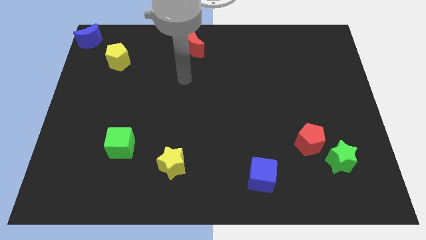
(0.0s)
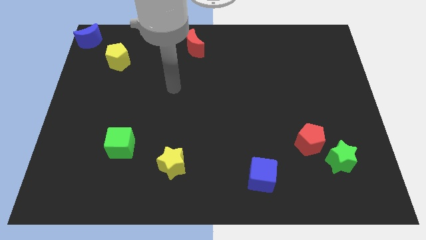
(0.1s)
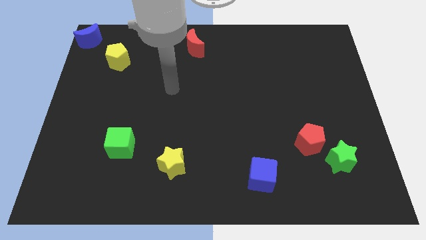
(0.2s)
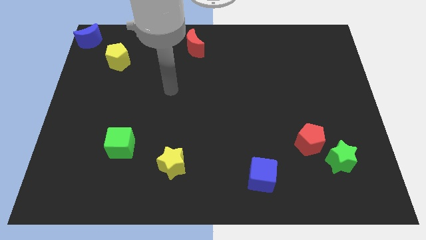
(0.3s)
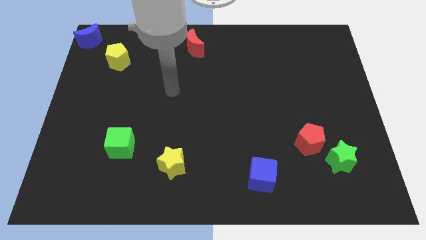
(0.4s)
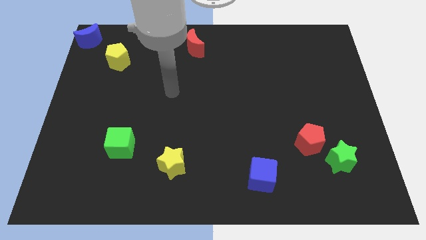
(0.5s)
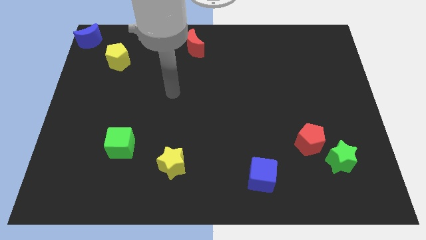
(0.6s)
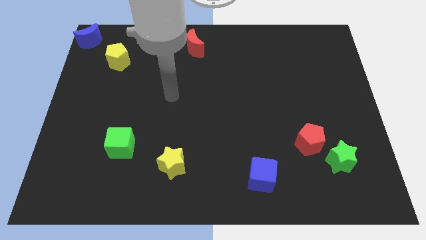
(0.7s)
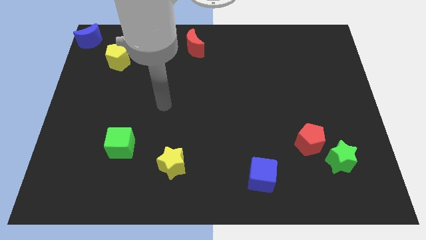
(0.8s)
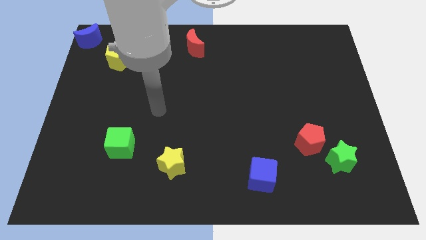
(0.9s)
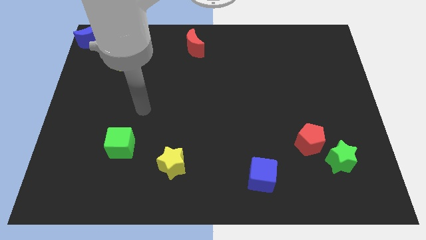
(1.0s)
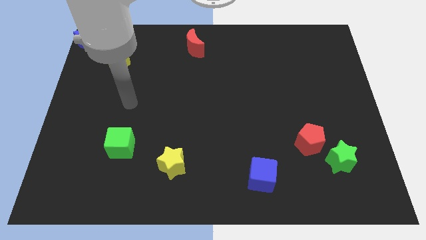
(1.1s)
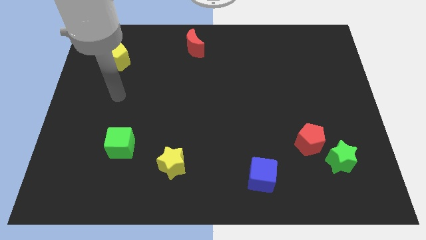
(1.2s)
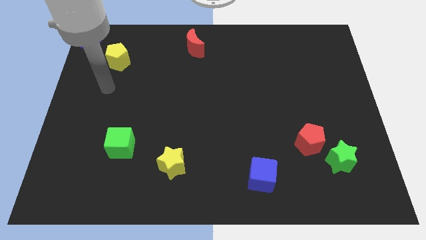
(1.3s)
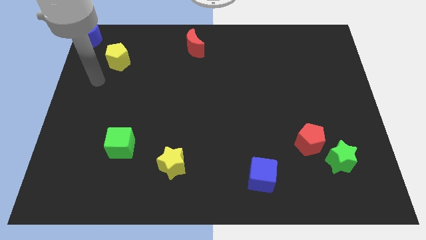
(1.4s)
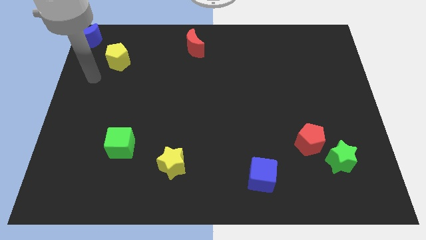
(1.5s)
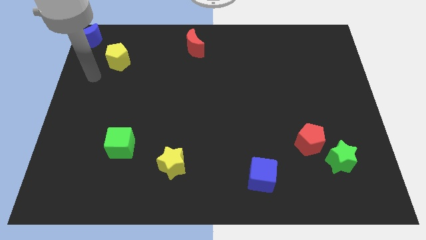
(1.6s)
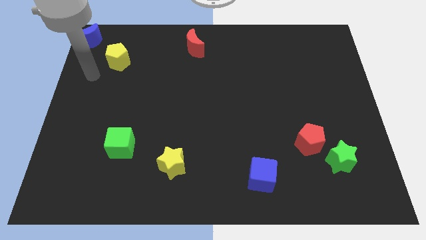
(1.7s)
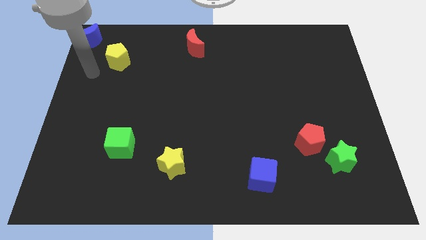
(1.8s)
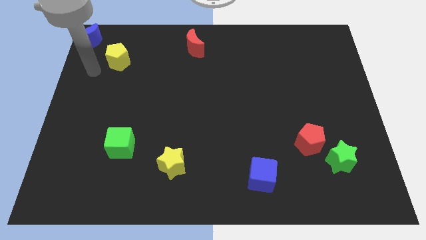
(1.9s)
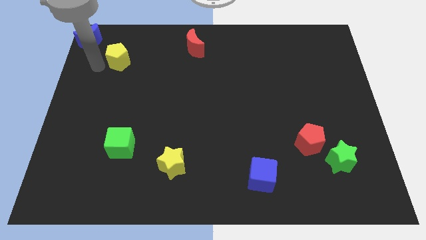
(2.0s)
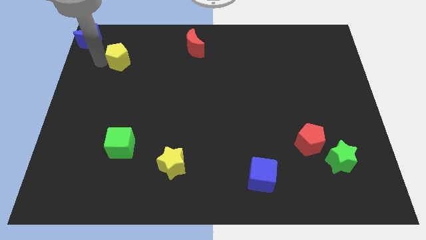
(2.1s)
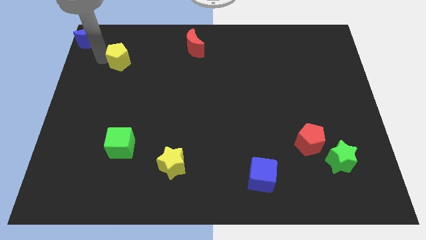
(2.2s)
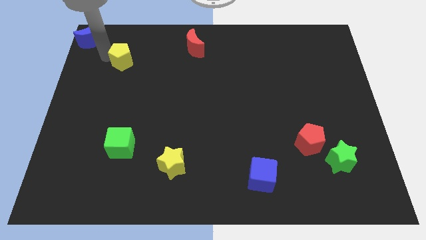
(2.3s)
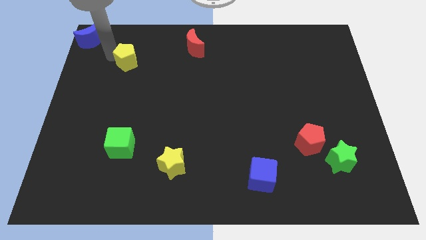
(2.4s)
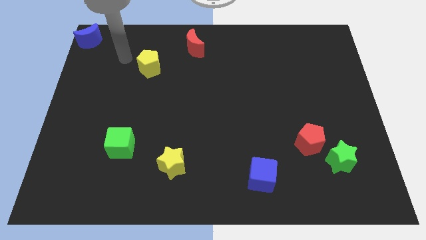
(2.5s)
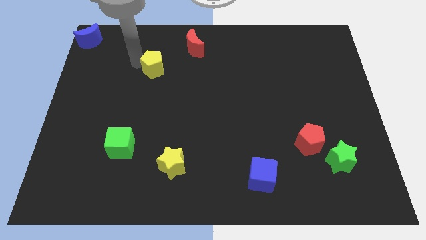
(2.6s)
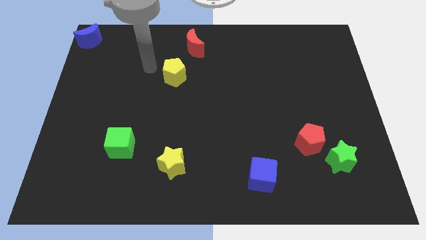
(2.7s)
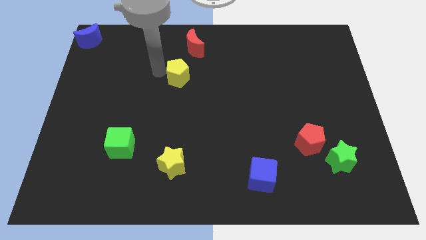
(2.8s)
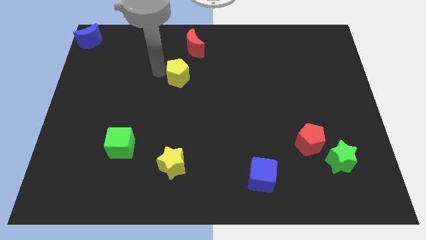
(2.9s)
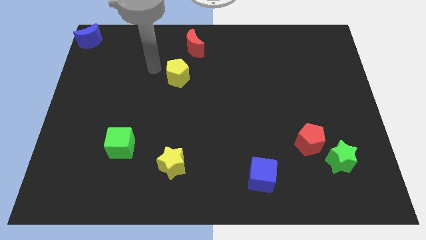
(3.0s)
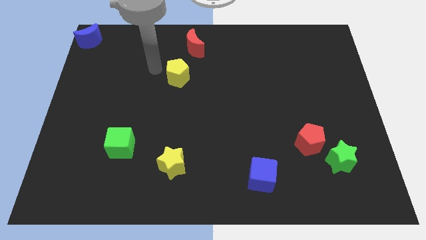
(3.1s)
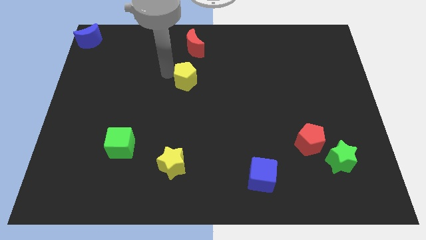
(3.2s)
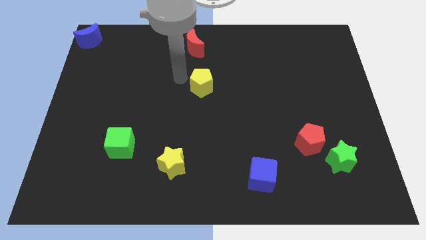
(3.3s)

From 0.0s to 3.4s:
move the yellow pentagon to the bottom of the red crescent

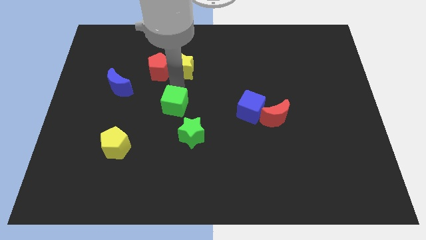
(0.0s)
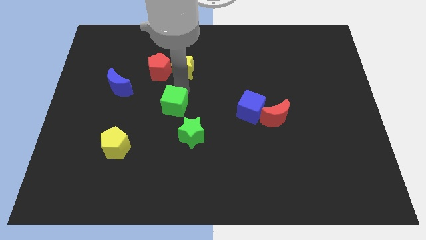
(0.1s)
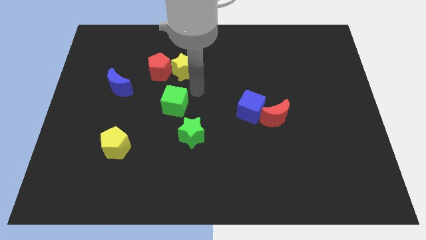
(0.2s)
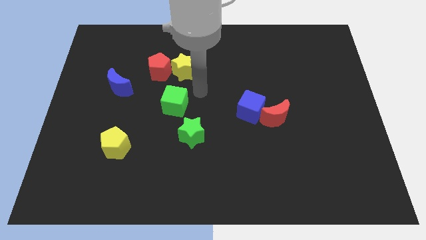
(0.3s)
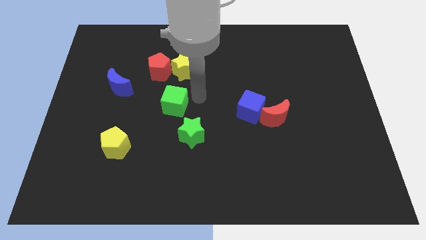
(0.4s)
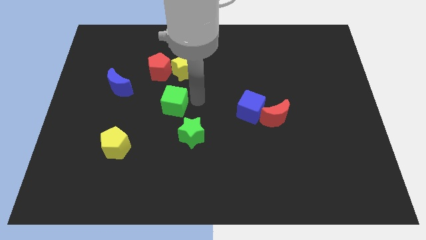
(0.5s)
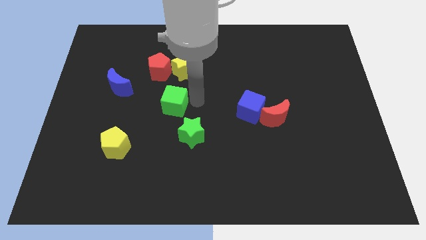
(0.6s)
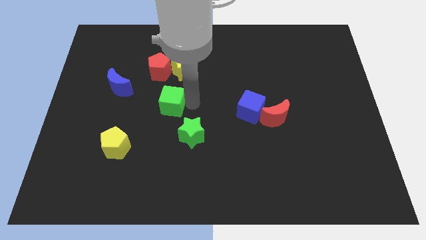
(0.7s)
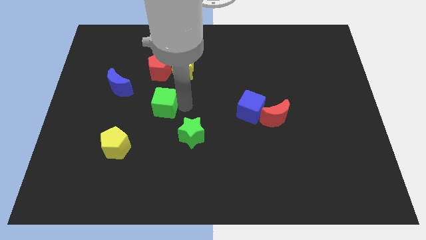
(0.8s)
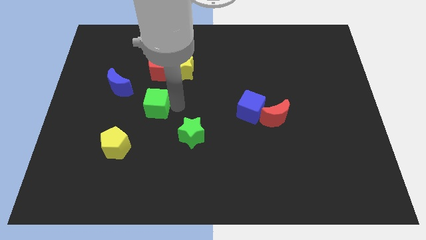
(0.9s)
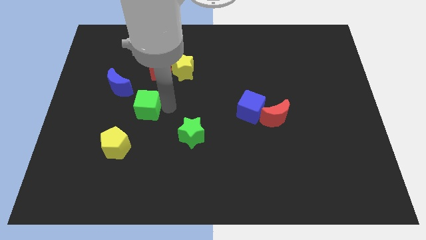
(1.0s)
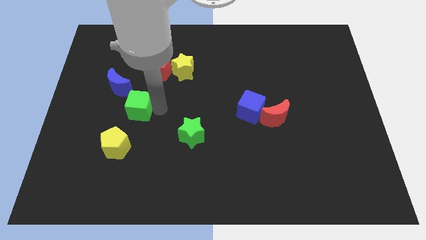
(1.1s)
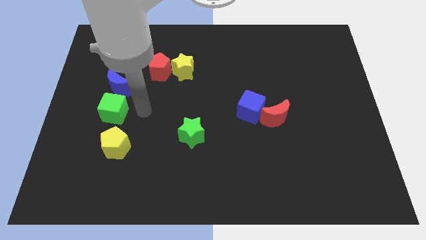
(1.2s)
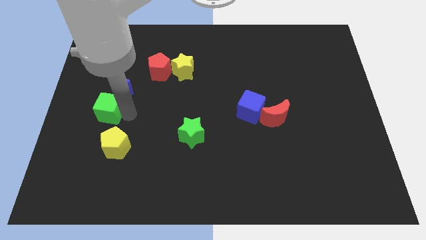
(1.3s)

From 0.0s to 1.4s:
push the green cube above the yellow pentagon

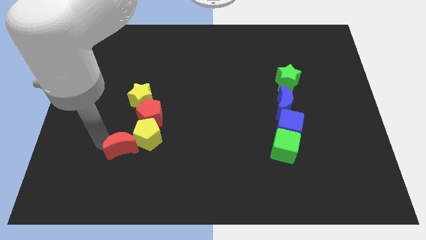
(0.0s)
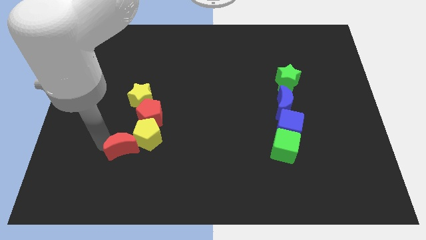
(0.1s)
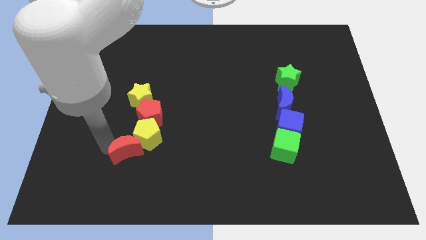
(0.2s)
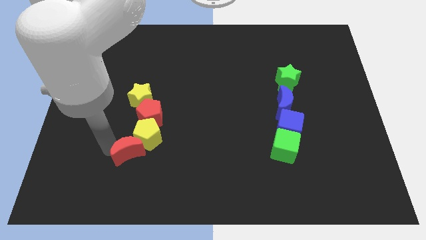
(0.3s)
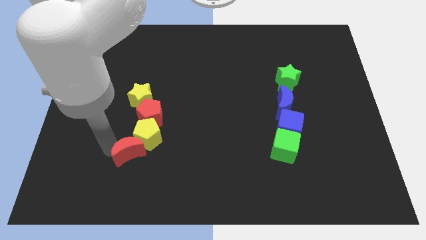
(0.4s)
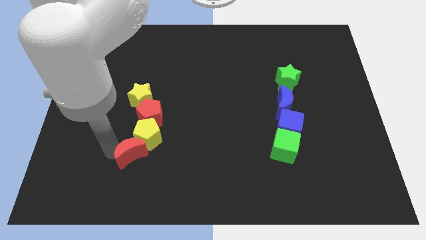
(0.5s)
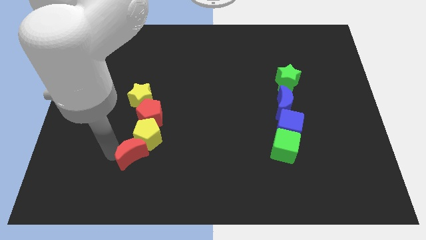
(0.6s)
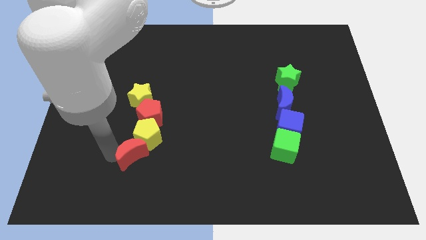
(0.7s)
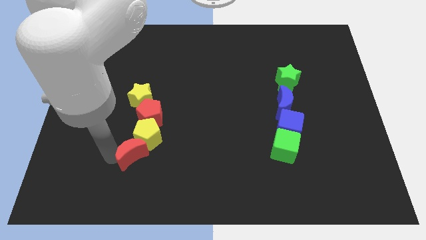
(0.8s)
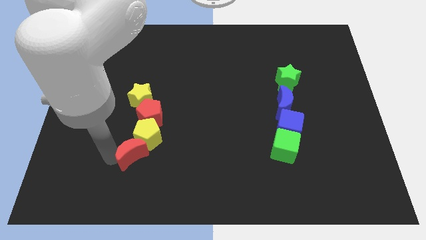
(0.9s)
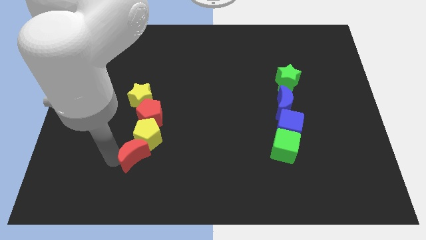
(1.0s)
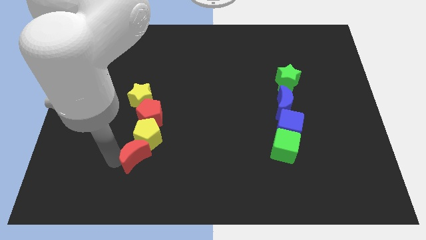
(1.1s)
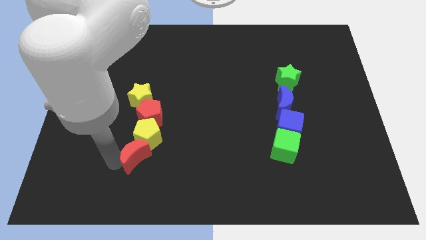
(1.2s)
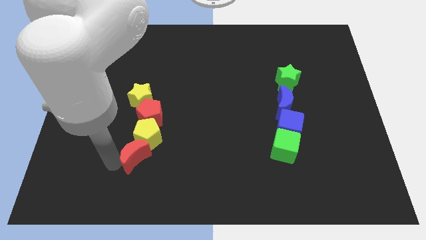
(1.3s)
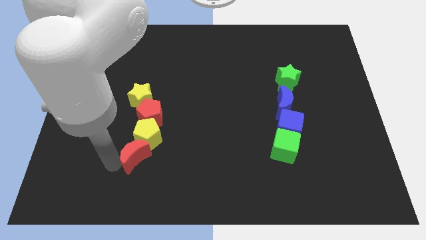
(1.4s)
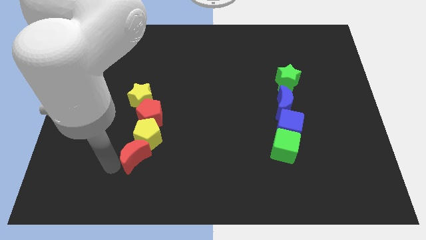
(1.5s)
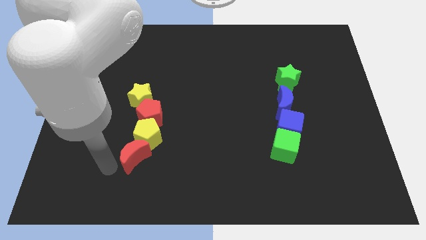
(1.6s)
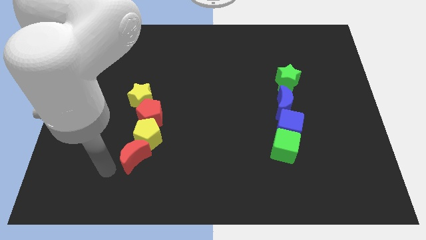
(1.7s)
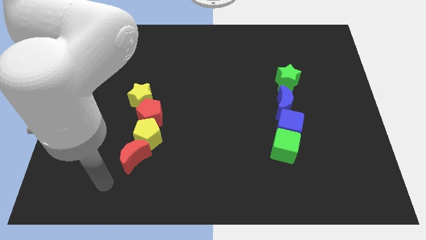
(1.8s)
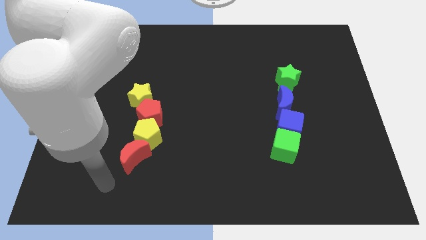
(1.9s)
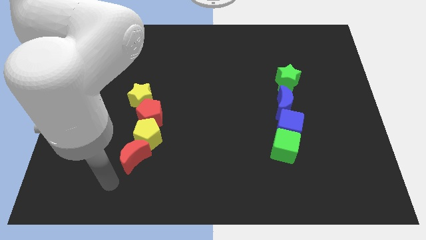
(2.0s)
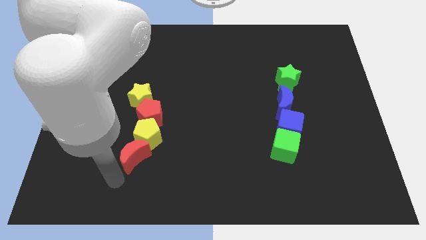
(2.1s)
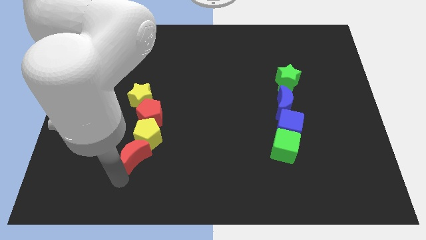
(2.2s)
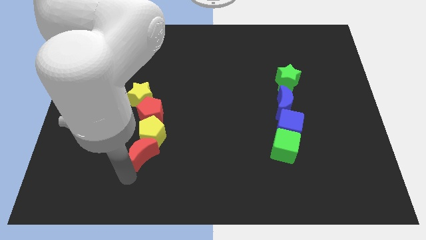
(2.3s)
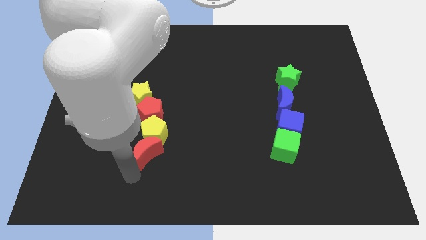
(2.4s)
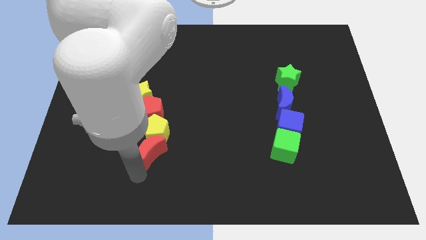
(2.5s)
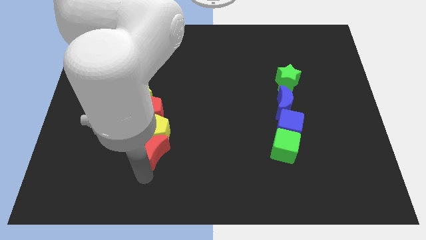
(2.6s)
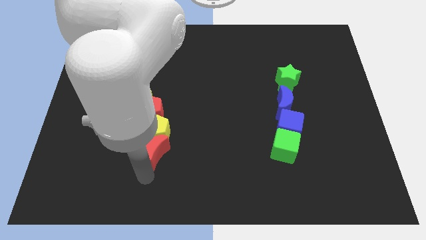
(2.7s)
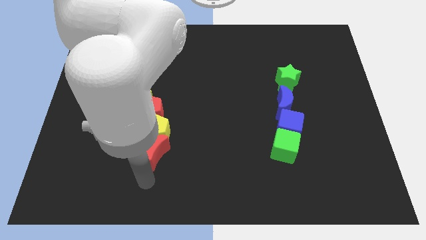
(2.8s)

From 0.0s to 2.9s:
place the red crescent below the yellow pentagon

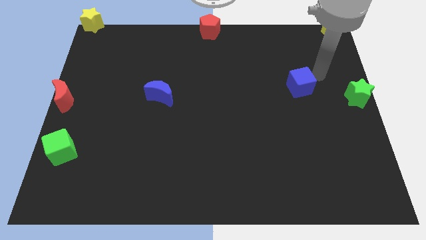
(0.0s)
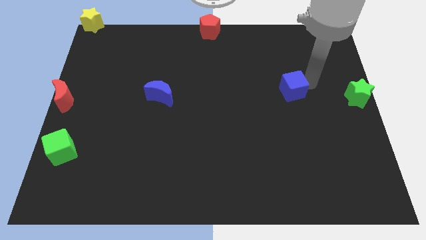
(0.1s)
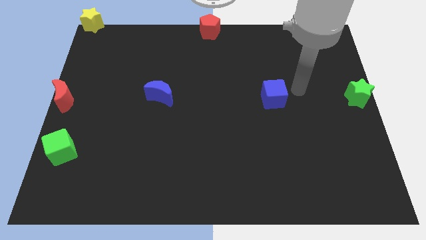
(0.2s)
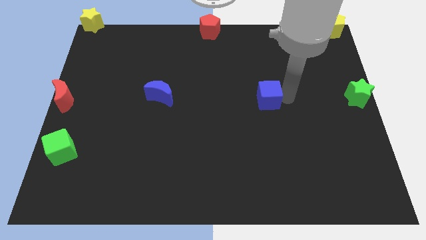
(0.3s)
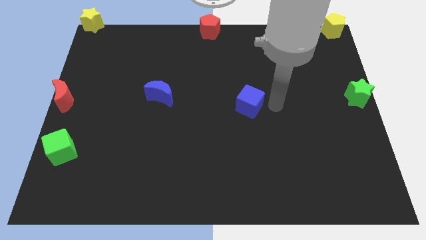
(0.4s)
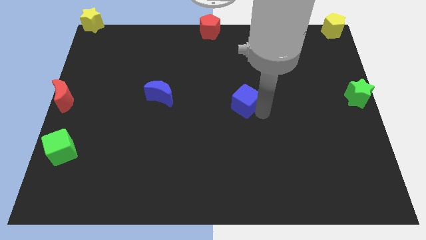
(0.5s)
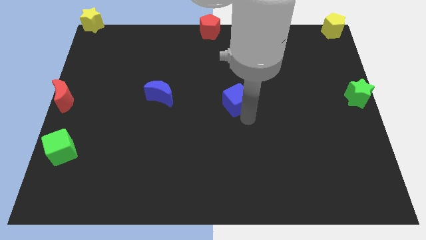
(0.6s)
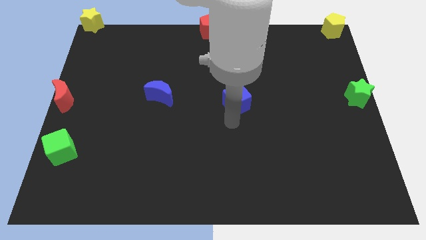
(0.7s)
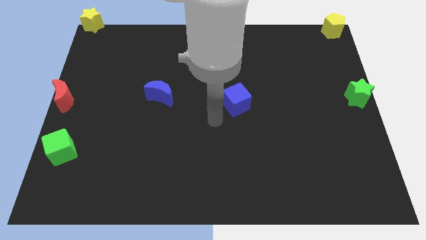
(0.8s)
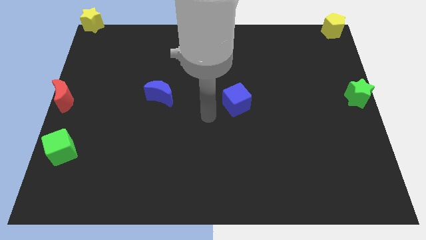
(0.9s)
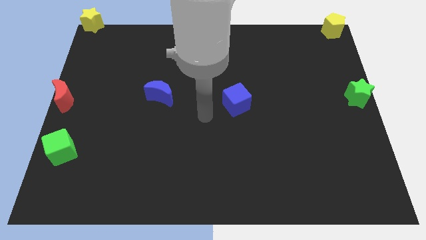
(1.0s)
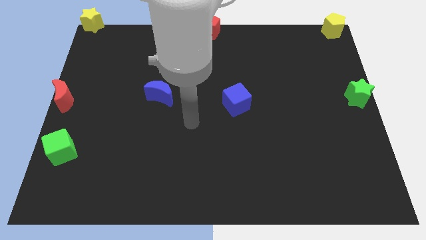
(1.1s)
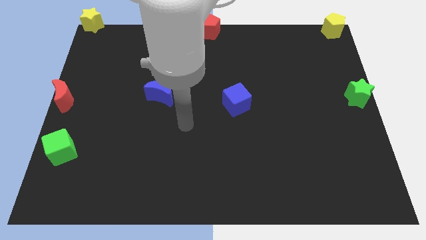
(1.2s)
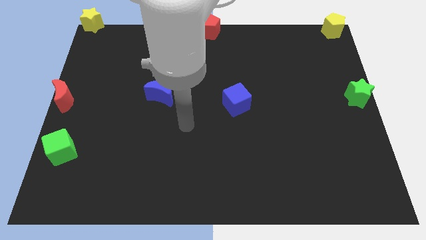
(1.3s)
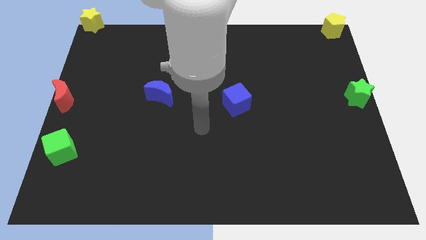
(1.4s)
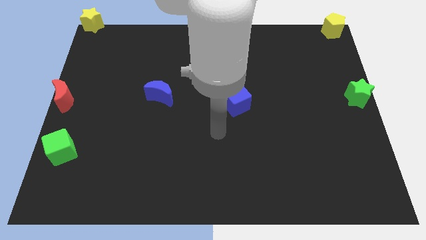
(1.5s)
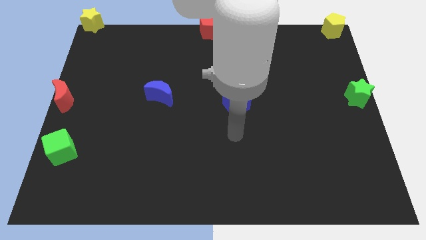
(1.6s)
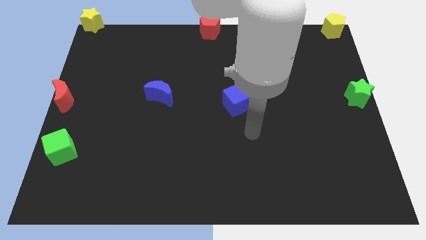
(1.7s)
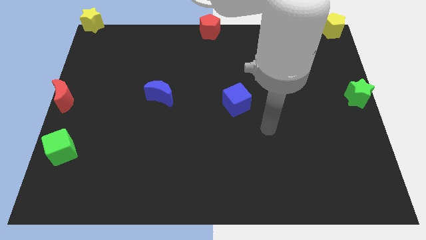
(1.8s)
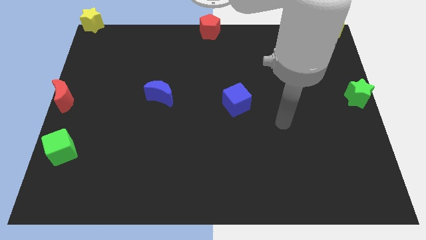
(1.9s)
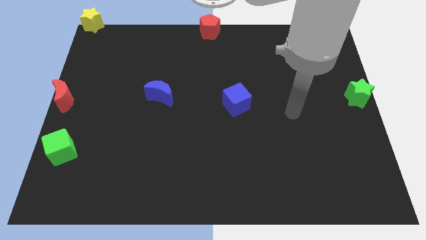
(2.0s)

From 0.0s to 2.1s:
move blue cube to the center of the board
